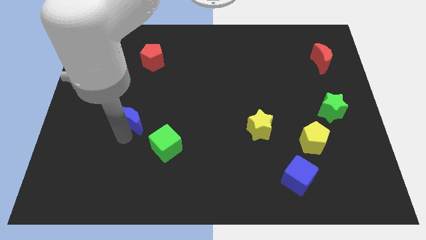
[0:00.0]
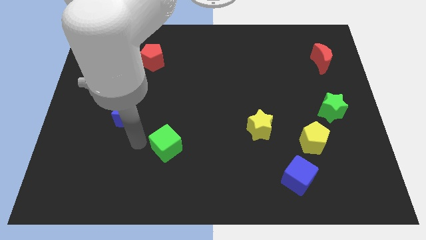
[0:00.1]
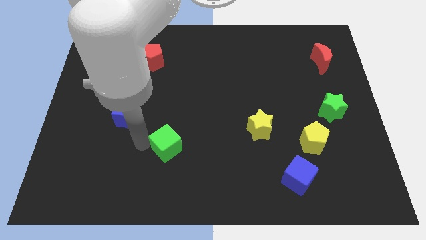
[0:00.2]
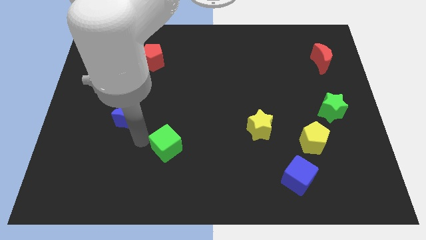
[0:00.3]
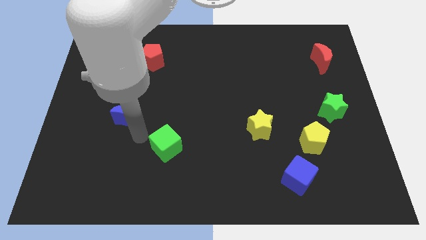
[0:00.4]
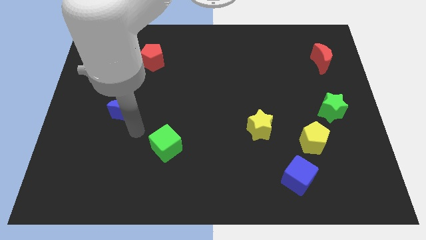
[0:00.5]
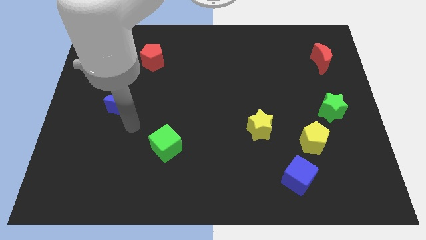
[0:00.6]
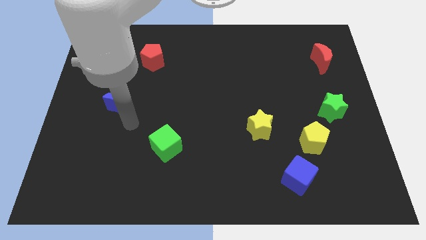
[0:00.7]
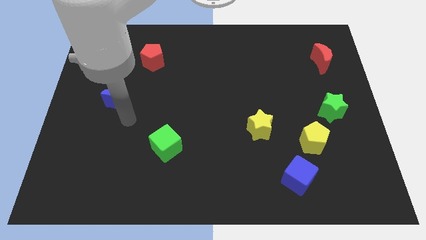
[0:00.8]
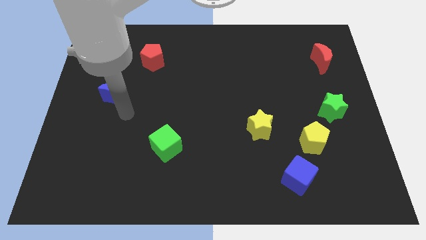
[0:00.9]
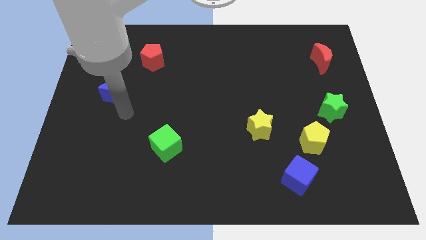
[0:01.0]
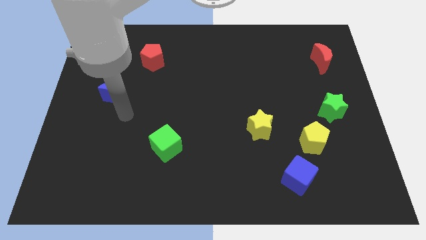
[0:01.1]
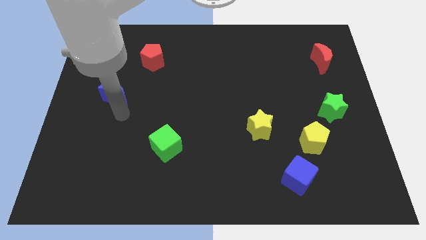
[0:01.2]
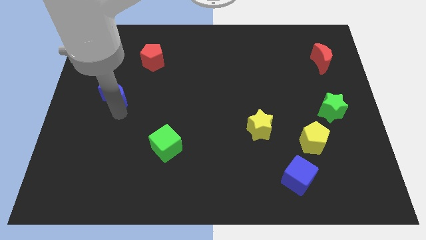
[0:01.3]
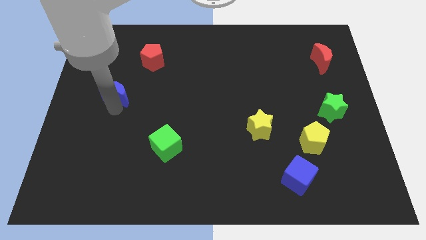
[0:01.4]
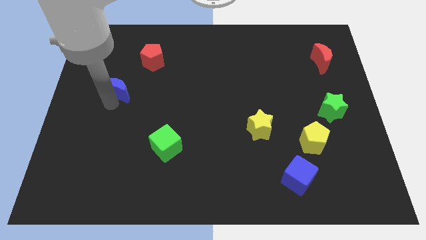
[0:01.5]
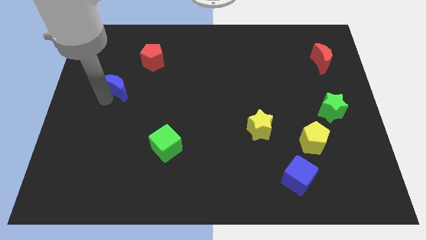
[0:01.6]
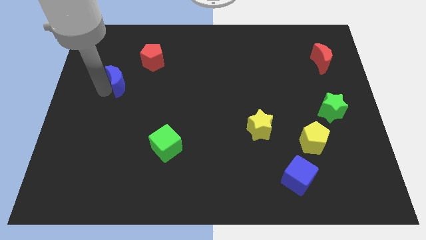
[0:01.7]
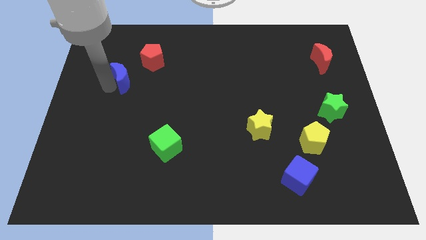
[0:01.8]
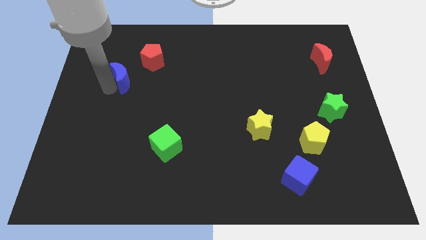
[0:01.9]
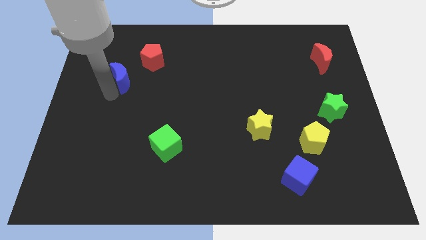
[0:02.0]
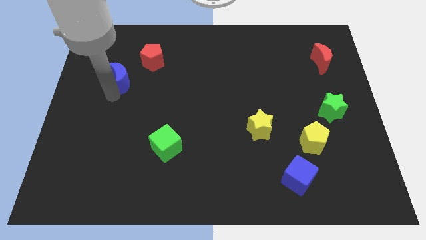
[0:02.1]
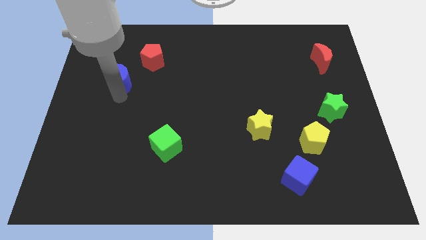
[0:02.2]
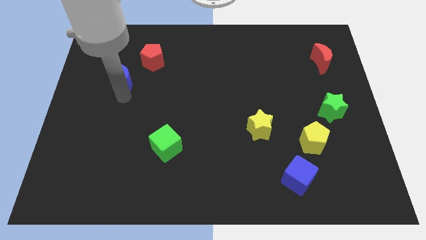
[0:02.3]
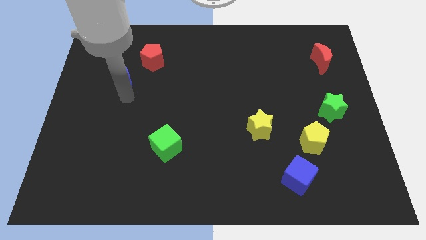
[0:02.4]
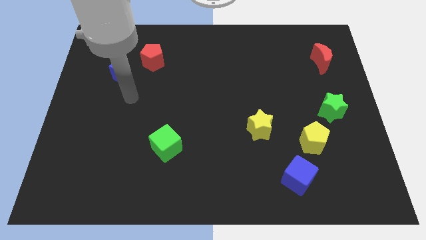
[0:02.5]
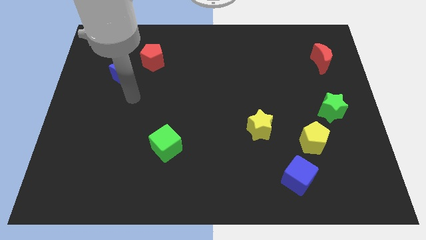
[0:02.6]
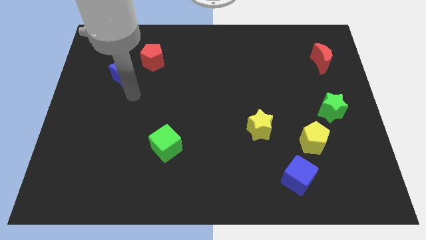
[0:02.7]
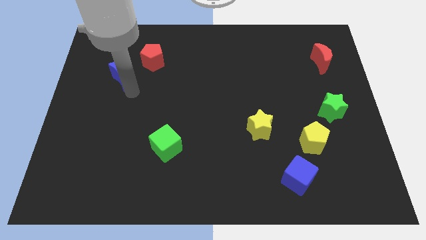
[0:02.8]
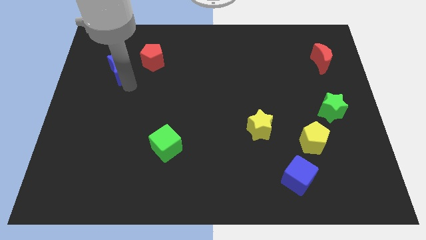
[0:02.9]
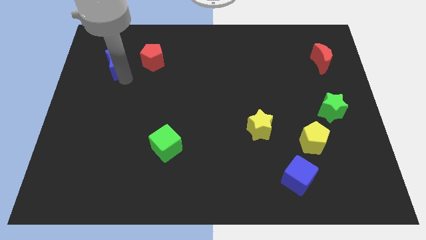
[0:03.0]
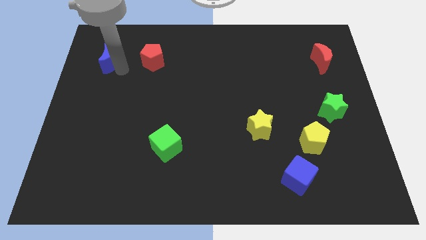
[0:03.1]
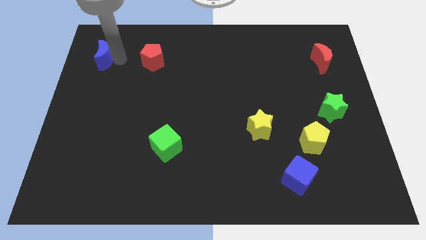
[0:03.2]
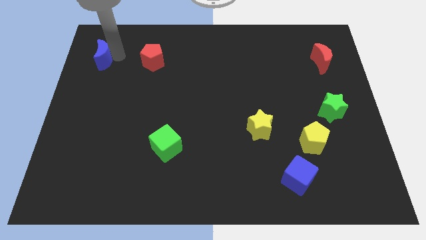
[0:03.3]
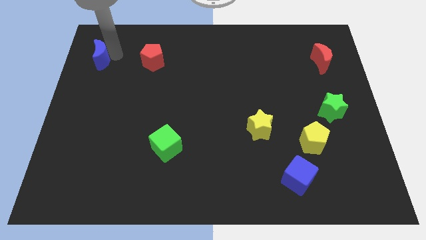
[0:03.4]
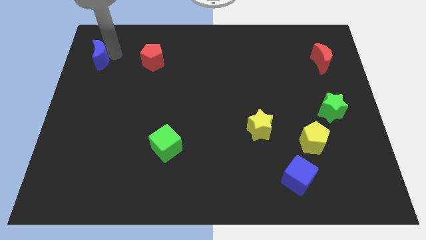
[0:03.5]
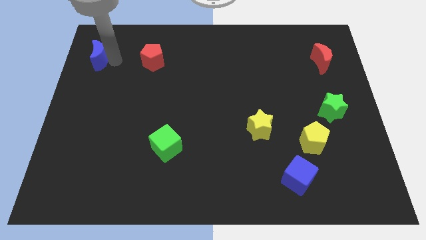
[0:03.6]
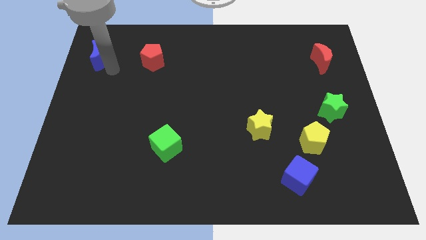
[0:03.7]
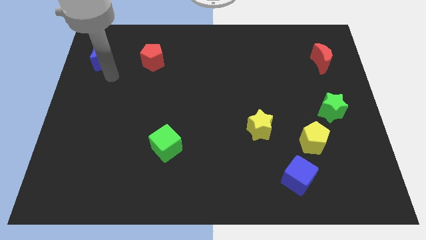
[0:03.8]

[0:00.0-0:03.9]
place the blue crescent horizontally at the right side of the red pentagon

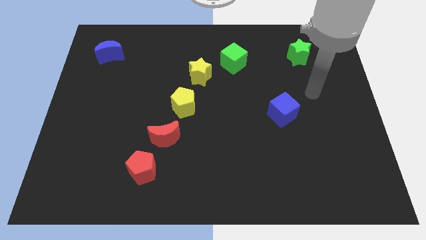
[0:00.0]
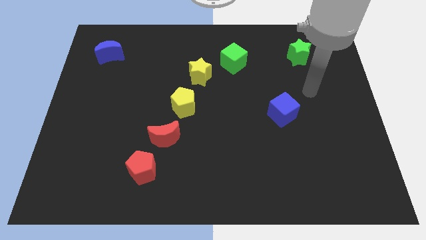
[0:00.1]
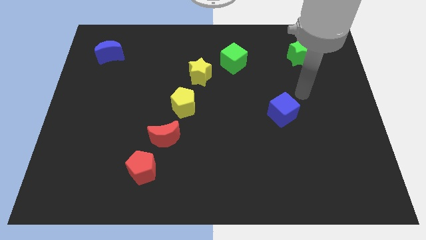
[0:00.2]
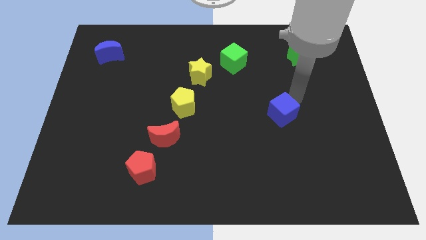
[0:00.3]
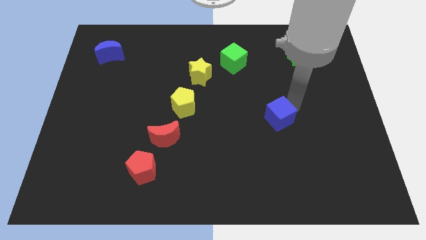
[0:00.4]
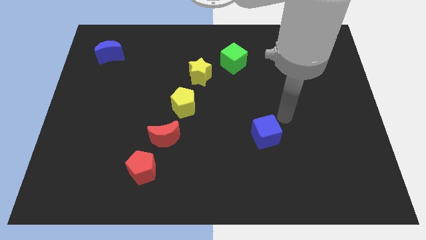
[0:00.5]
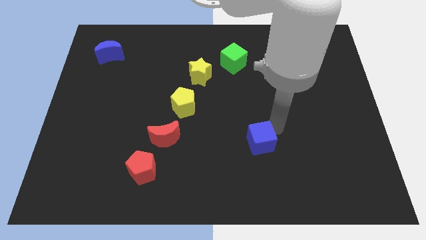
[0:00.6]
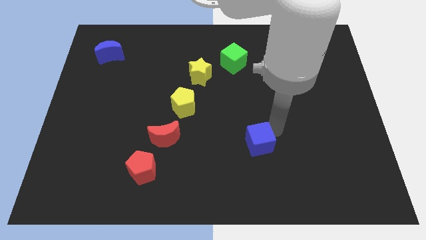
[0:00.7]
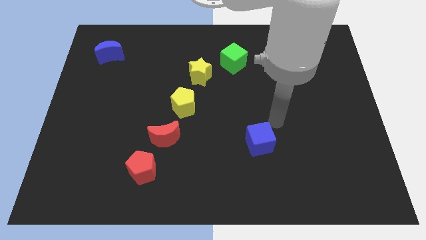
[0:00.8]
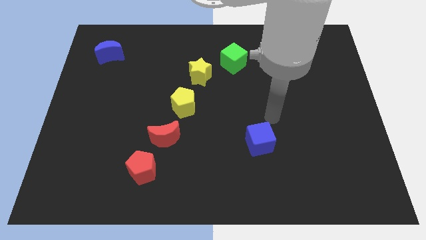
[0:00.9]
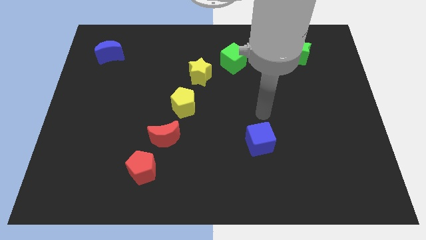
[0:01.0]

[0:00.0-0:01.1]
place blue cube to the right of red moon

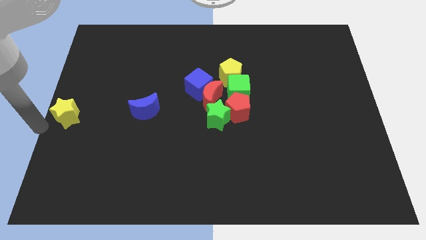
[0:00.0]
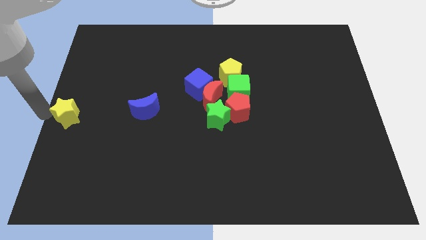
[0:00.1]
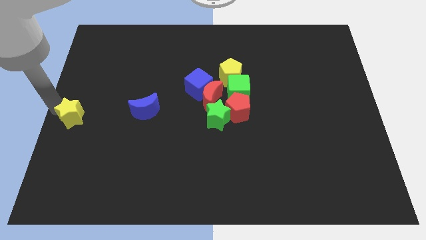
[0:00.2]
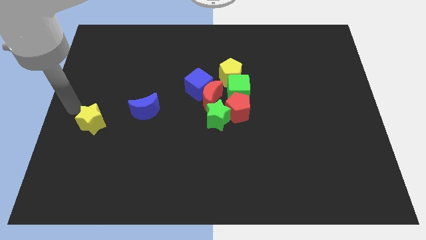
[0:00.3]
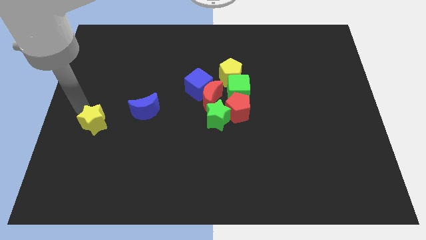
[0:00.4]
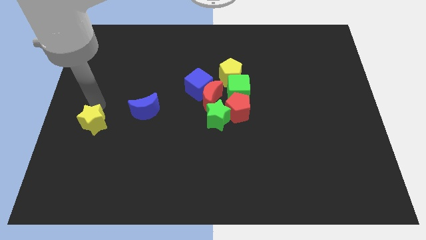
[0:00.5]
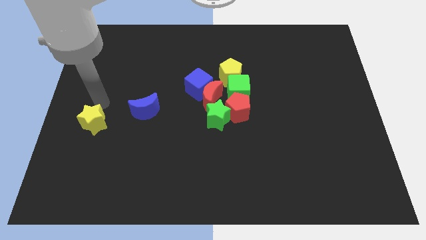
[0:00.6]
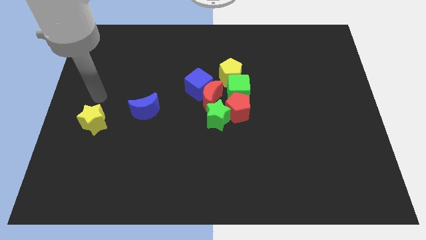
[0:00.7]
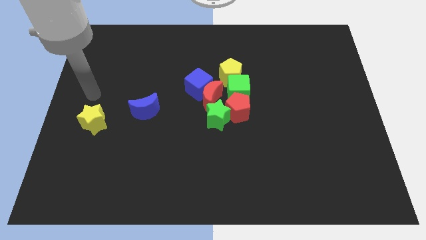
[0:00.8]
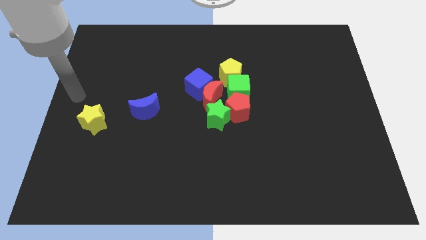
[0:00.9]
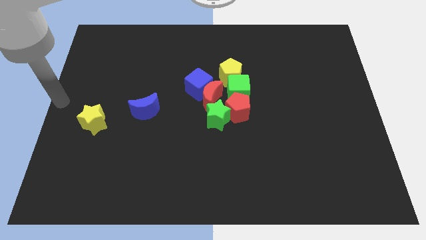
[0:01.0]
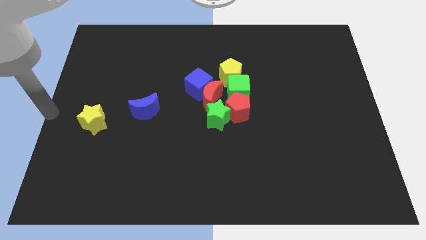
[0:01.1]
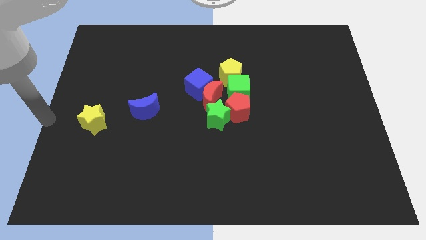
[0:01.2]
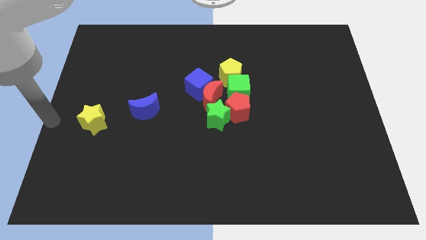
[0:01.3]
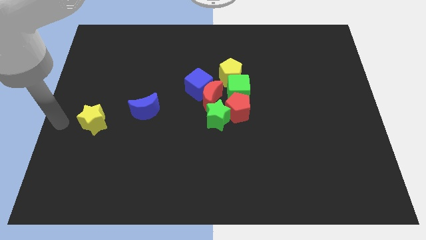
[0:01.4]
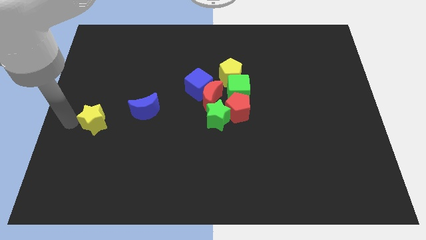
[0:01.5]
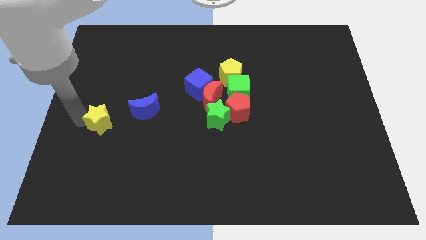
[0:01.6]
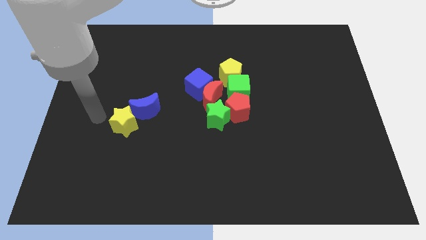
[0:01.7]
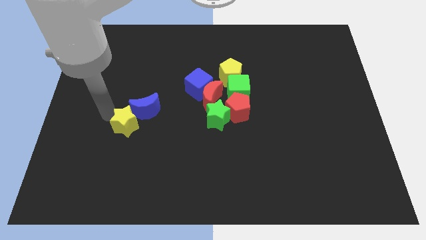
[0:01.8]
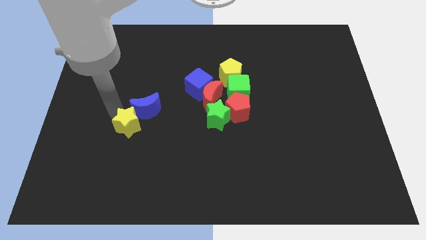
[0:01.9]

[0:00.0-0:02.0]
move yellow star into blue moon

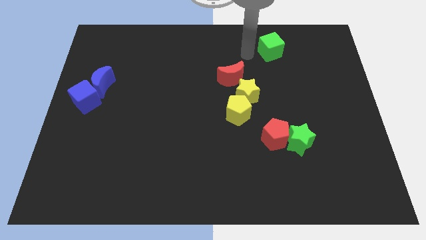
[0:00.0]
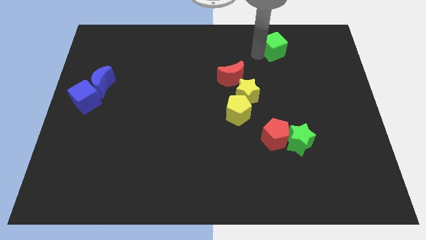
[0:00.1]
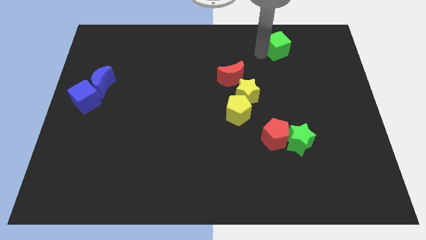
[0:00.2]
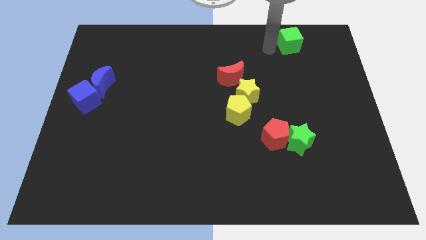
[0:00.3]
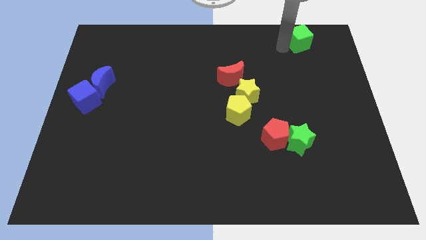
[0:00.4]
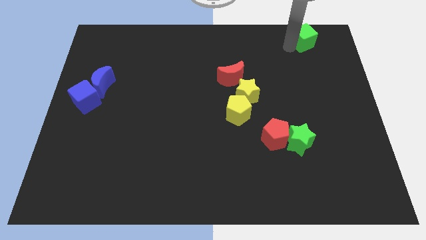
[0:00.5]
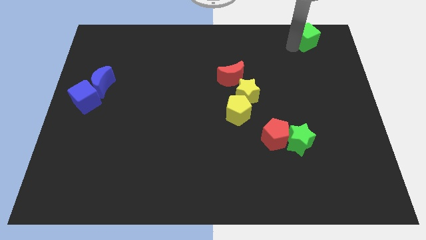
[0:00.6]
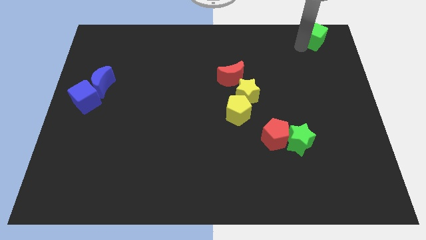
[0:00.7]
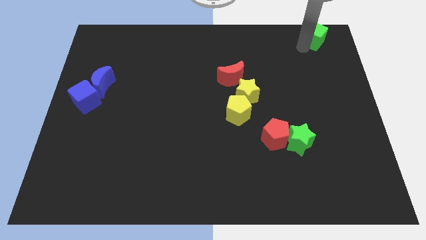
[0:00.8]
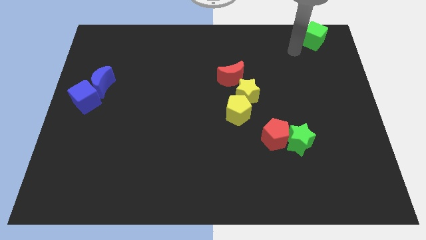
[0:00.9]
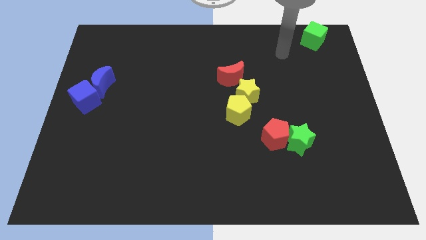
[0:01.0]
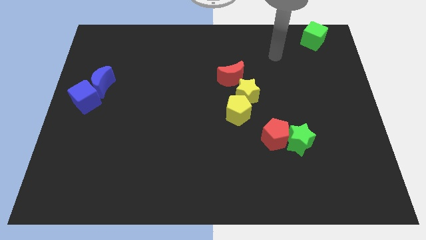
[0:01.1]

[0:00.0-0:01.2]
push the green cube towards the top right corner of the board

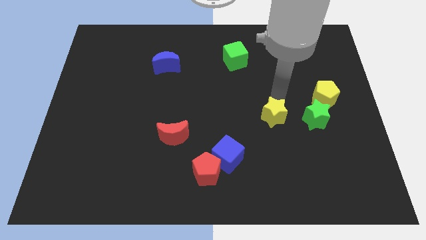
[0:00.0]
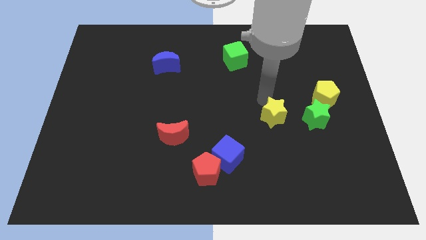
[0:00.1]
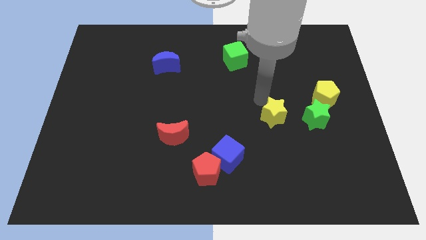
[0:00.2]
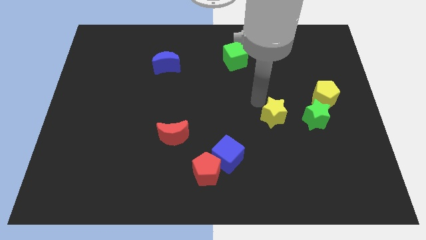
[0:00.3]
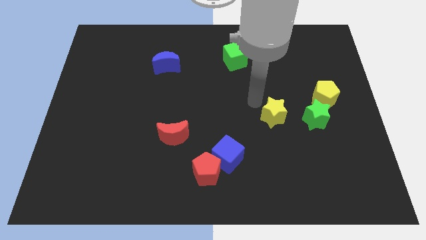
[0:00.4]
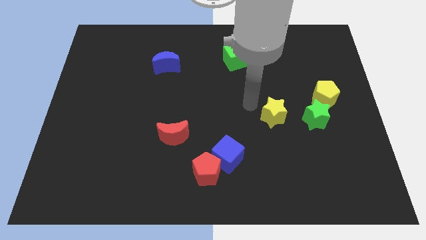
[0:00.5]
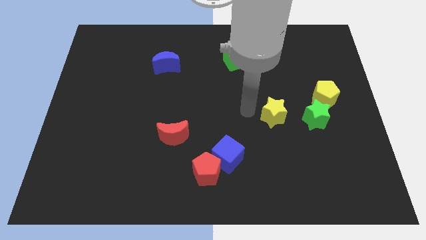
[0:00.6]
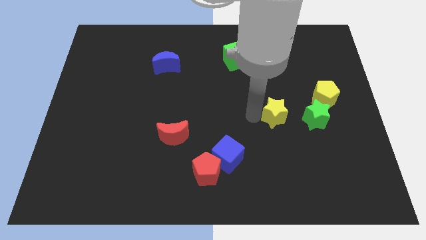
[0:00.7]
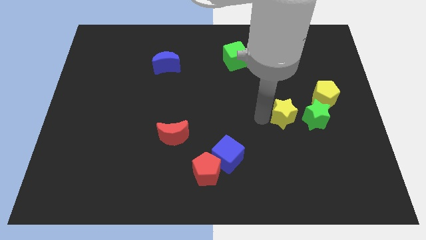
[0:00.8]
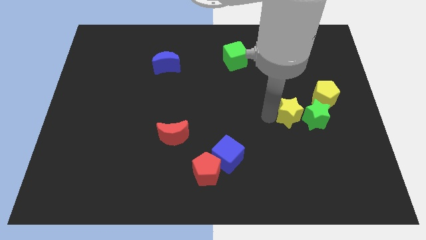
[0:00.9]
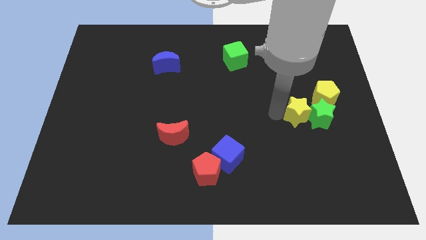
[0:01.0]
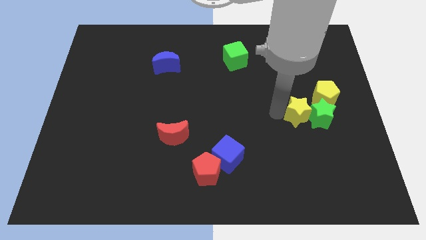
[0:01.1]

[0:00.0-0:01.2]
push the yellow star into the green star
